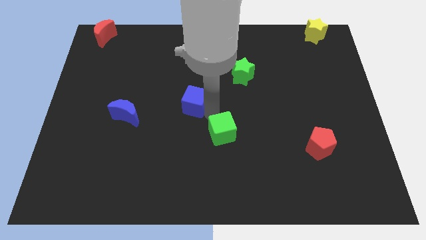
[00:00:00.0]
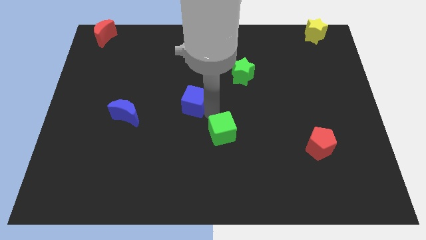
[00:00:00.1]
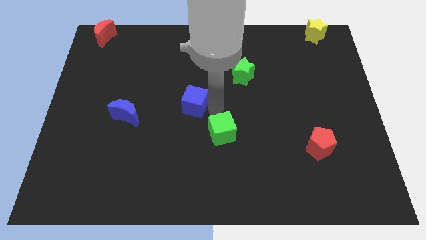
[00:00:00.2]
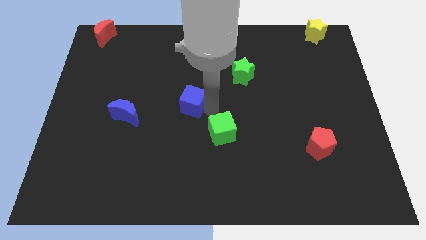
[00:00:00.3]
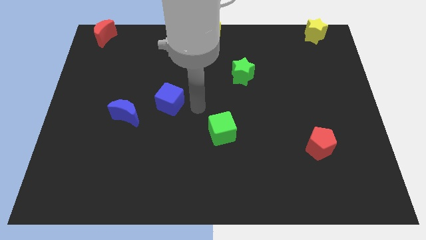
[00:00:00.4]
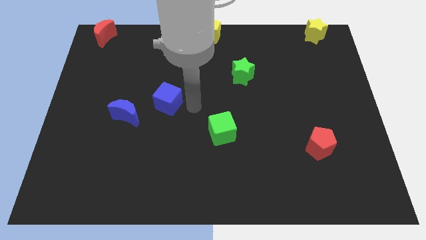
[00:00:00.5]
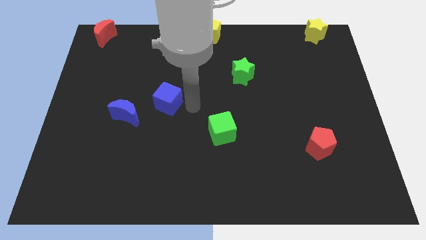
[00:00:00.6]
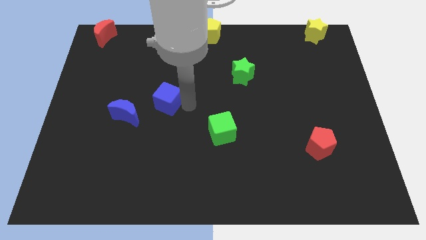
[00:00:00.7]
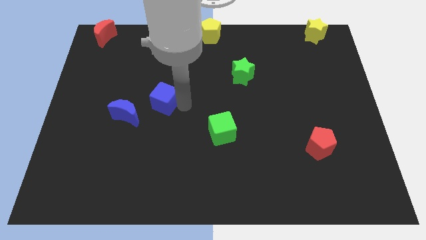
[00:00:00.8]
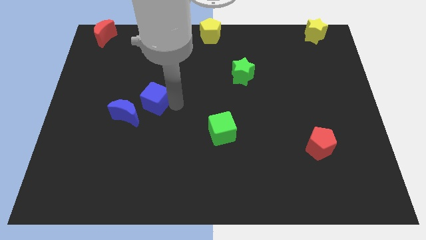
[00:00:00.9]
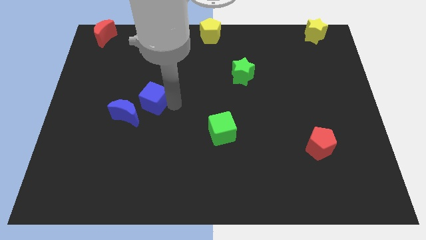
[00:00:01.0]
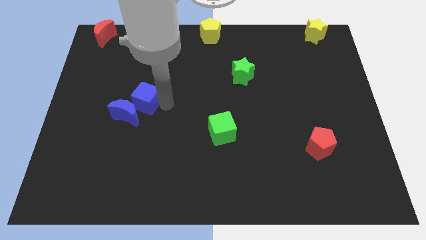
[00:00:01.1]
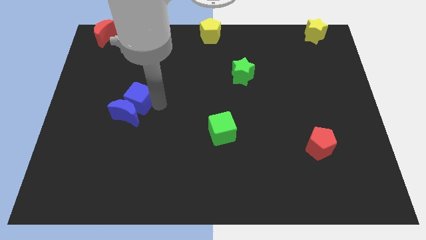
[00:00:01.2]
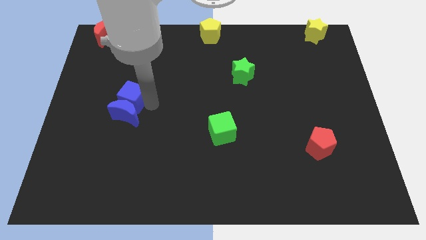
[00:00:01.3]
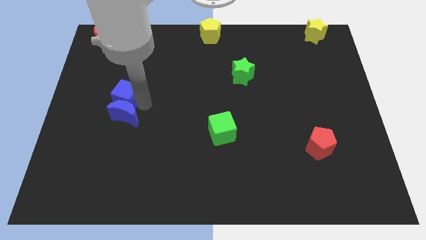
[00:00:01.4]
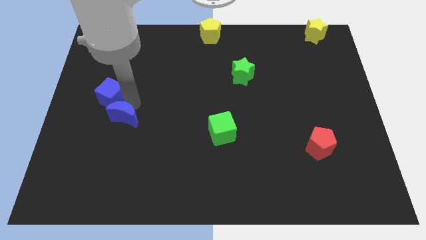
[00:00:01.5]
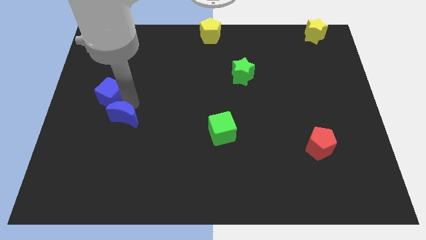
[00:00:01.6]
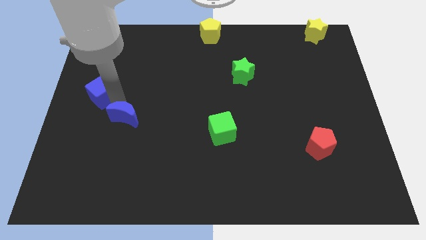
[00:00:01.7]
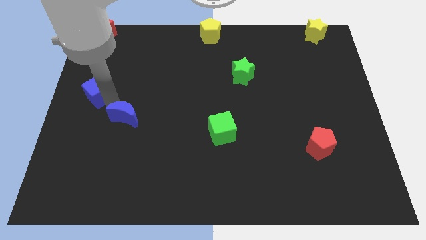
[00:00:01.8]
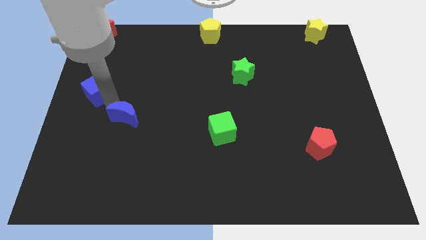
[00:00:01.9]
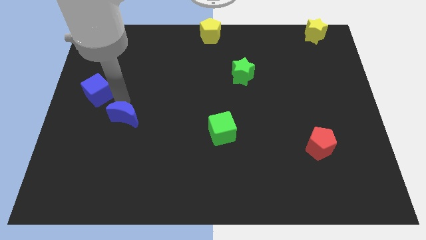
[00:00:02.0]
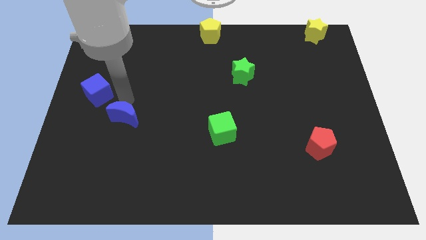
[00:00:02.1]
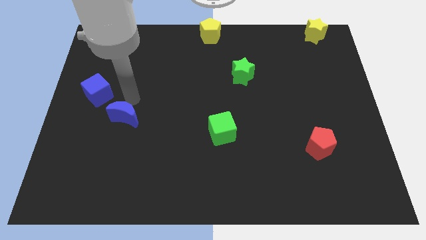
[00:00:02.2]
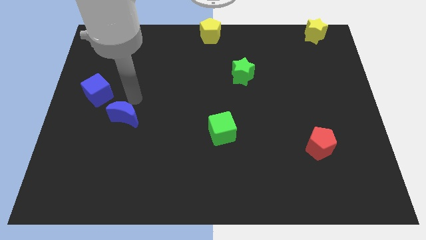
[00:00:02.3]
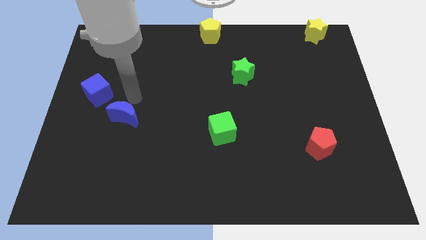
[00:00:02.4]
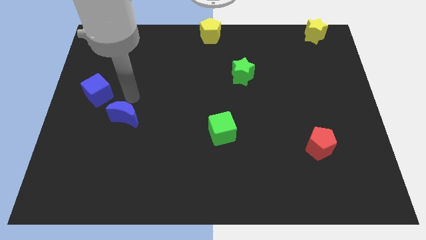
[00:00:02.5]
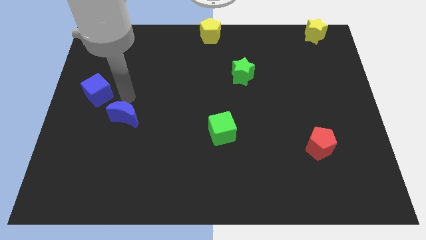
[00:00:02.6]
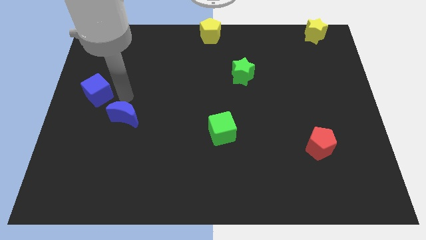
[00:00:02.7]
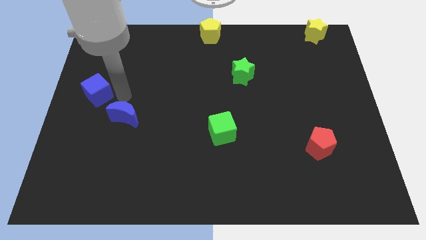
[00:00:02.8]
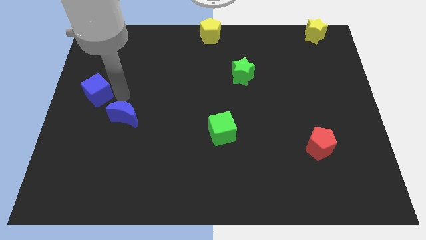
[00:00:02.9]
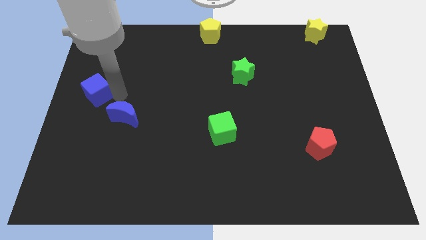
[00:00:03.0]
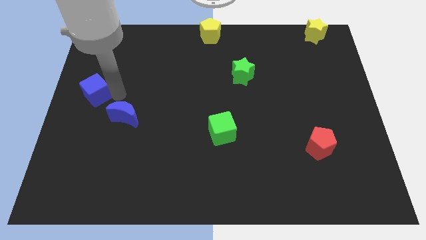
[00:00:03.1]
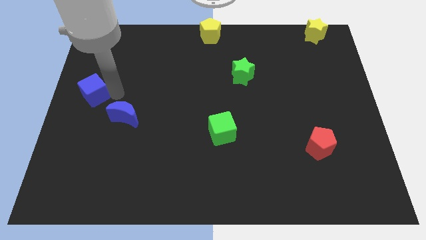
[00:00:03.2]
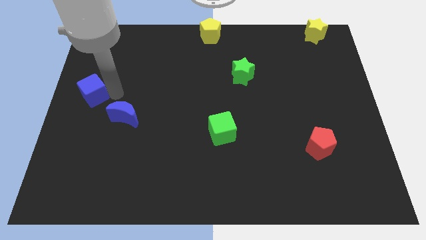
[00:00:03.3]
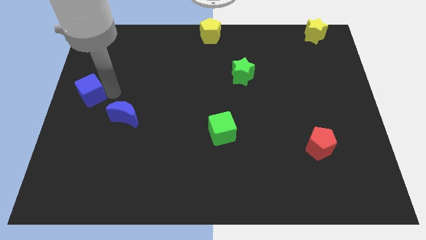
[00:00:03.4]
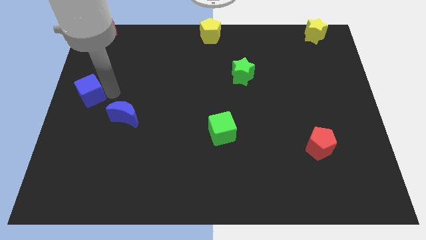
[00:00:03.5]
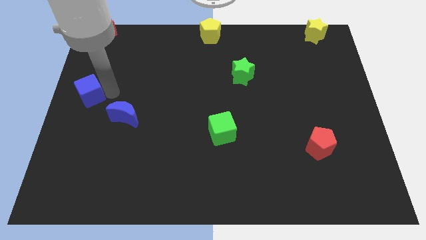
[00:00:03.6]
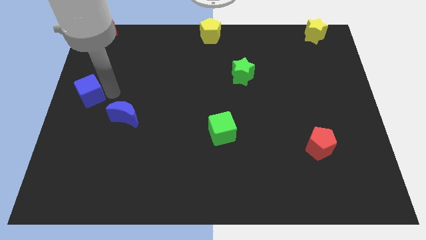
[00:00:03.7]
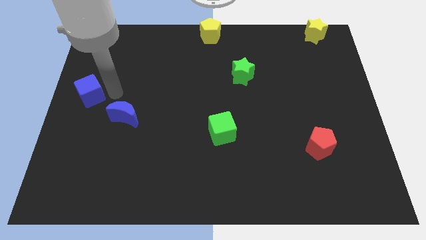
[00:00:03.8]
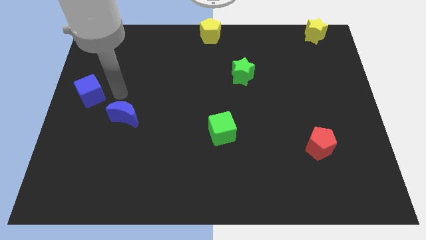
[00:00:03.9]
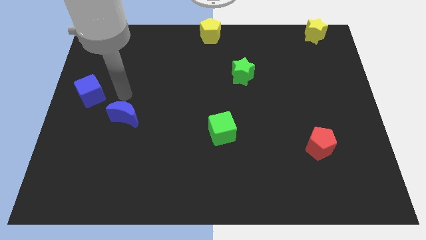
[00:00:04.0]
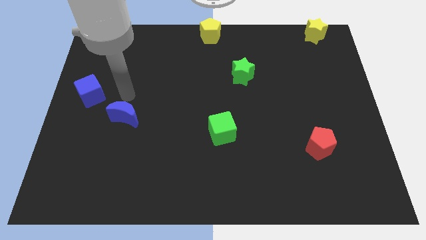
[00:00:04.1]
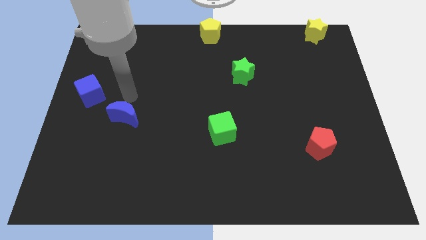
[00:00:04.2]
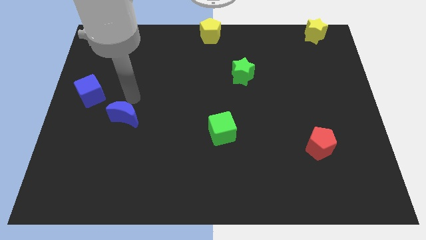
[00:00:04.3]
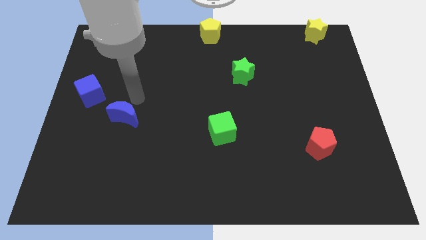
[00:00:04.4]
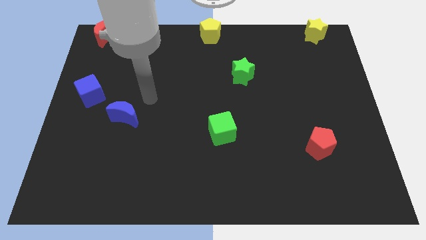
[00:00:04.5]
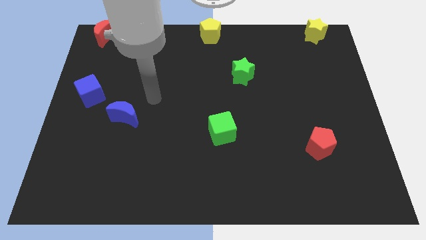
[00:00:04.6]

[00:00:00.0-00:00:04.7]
move the blue cube towards the left side of the board

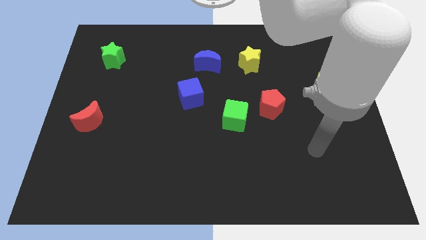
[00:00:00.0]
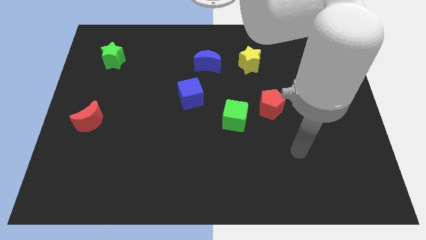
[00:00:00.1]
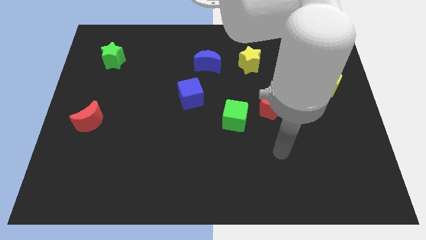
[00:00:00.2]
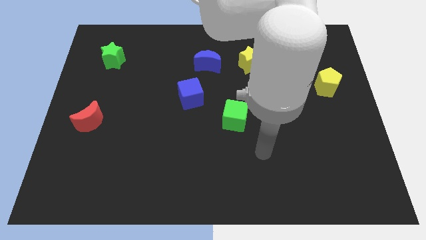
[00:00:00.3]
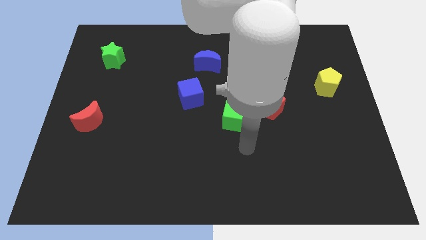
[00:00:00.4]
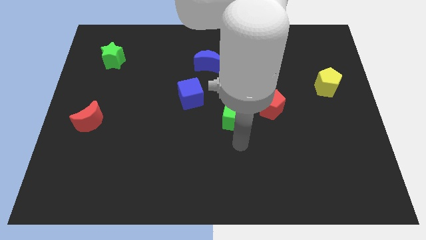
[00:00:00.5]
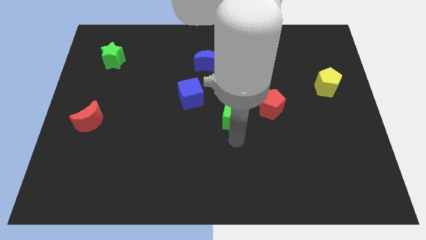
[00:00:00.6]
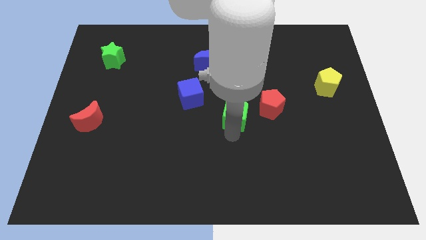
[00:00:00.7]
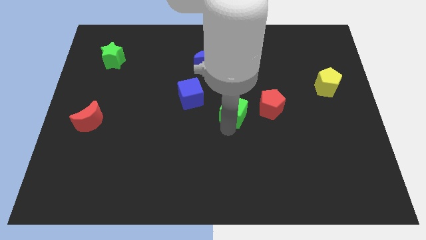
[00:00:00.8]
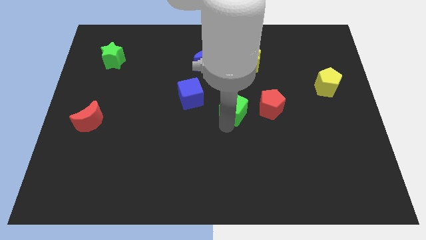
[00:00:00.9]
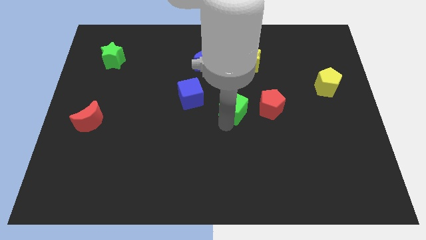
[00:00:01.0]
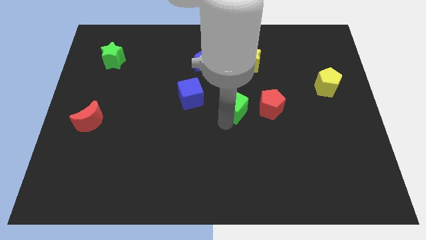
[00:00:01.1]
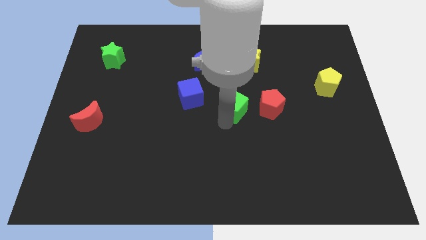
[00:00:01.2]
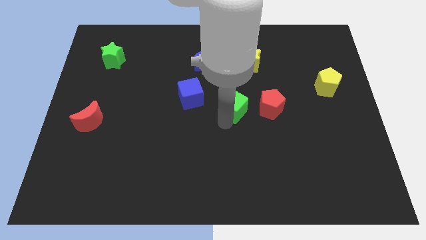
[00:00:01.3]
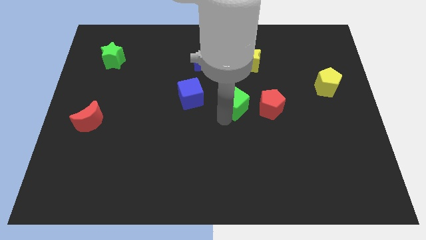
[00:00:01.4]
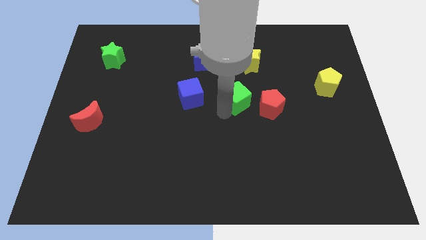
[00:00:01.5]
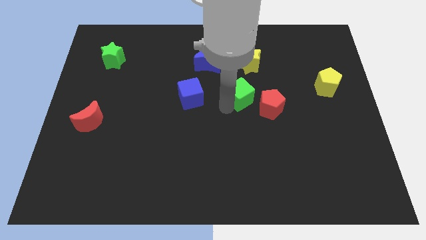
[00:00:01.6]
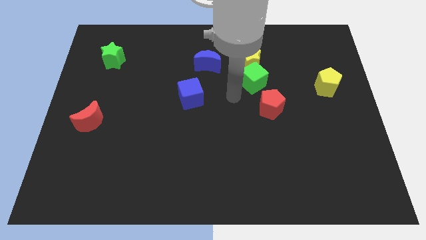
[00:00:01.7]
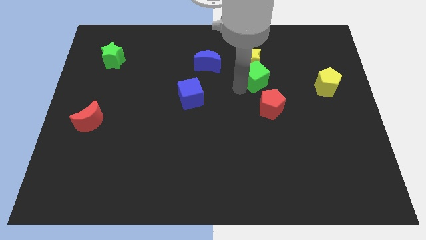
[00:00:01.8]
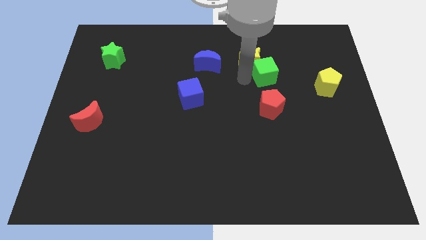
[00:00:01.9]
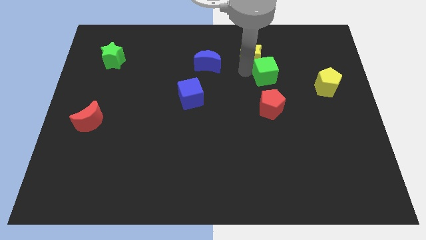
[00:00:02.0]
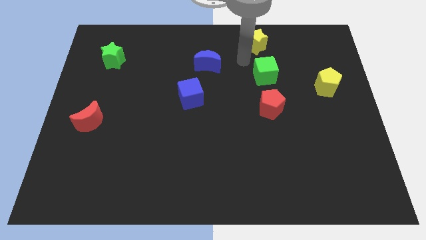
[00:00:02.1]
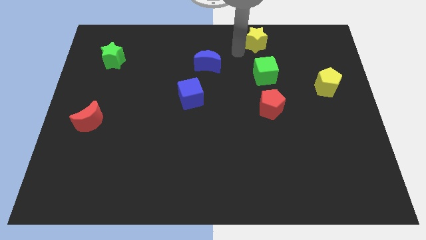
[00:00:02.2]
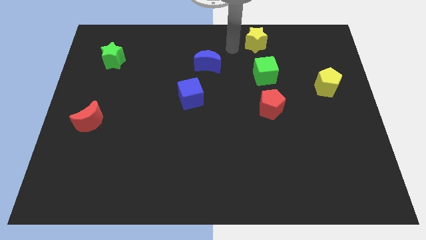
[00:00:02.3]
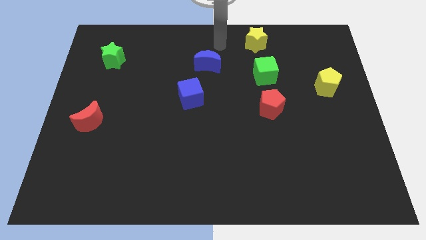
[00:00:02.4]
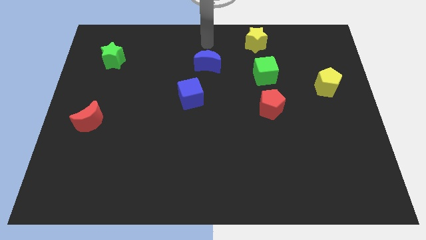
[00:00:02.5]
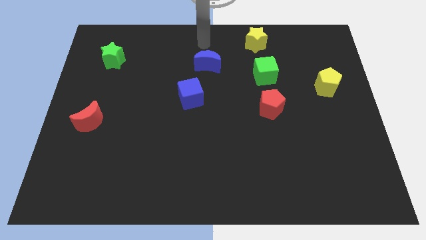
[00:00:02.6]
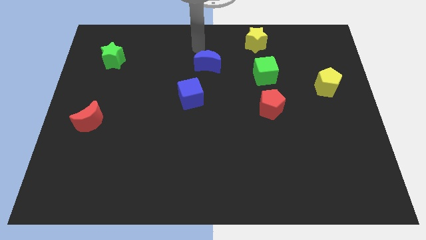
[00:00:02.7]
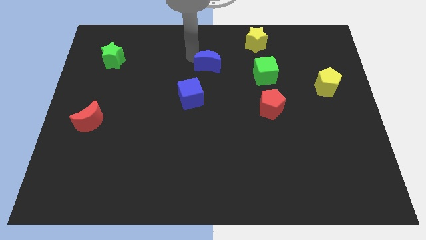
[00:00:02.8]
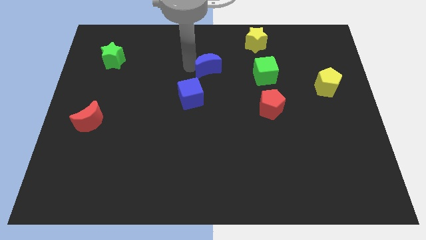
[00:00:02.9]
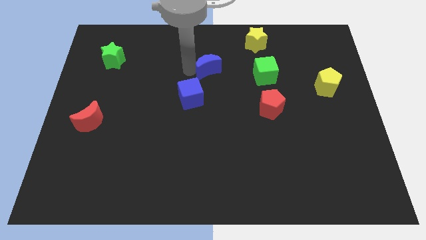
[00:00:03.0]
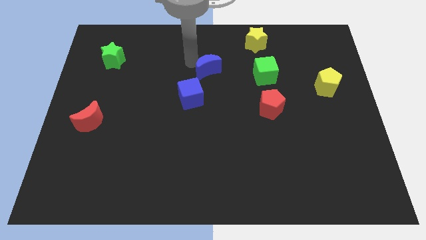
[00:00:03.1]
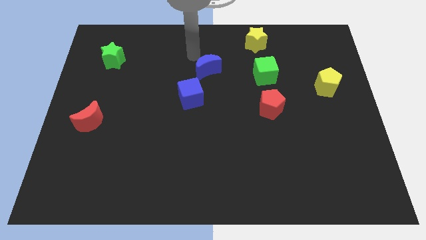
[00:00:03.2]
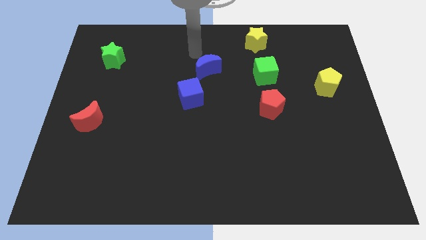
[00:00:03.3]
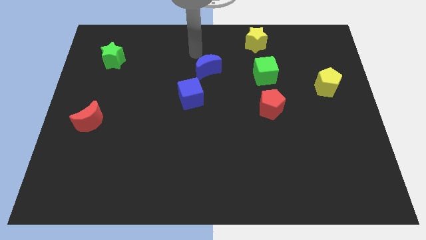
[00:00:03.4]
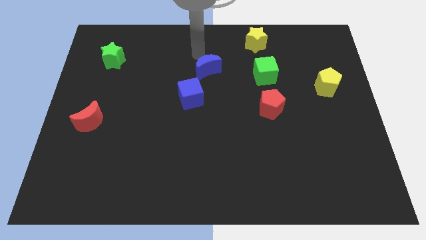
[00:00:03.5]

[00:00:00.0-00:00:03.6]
place the green cube between yellow star and red pentagon

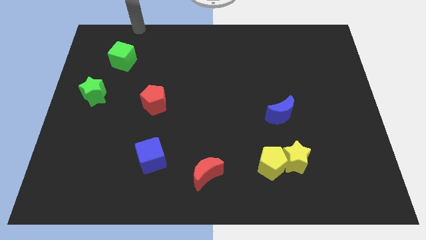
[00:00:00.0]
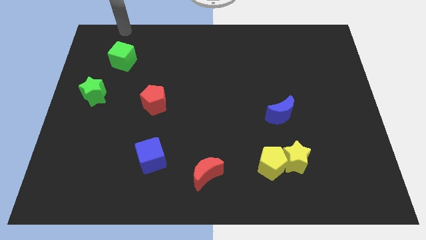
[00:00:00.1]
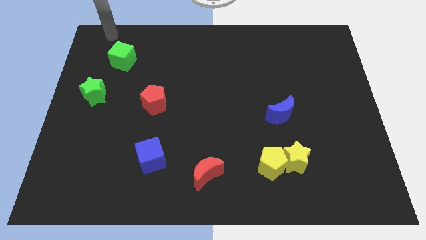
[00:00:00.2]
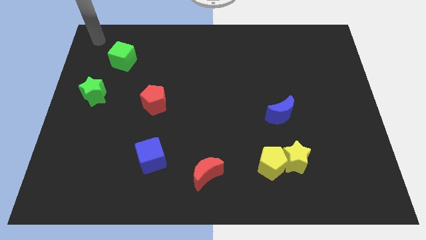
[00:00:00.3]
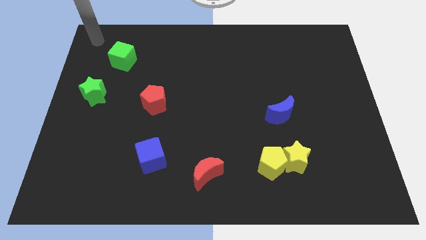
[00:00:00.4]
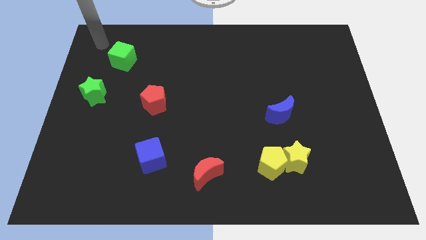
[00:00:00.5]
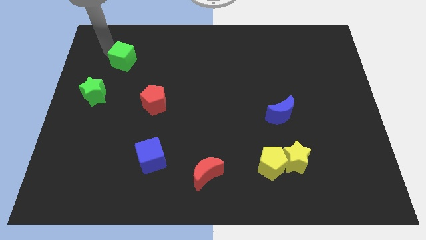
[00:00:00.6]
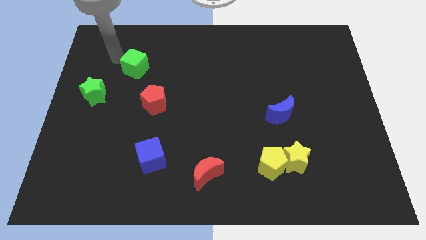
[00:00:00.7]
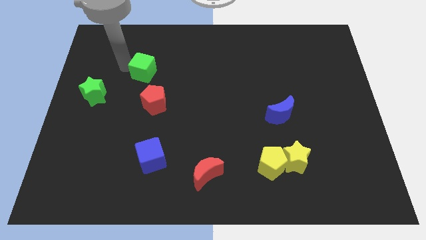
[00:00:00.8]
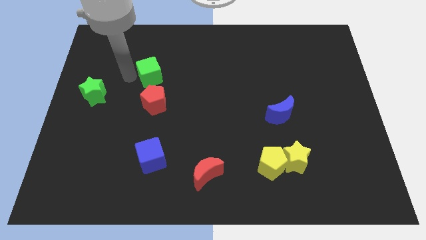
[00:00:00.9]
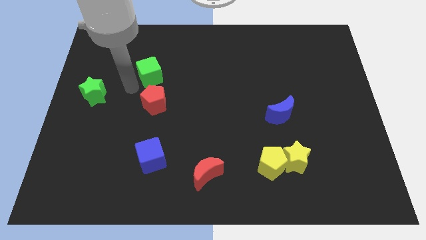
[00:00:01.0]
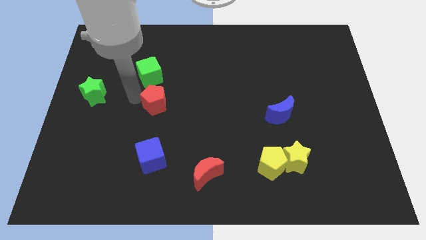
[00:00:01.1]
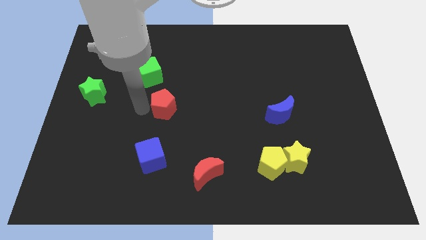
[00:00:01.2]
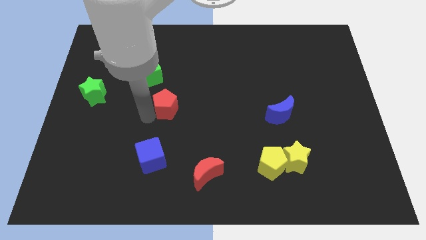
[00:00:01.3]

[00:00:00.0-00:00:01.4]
push the green cube towards the red pentagon
